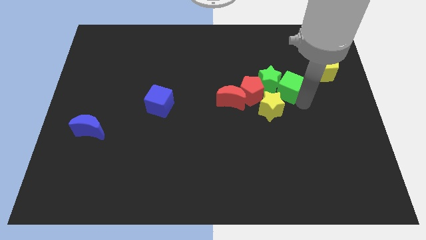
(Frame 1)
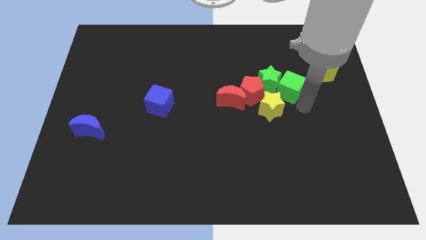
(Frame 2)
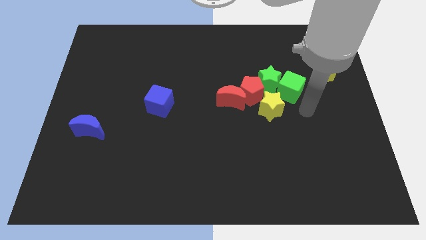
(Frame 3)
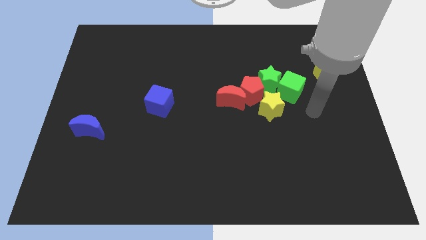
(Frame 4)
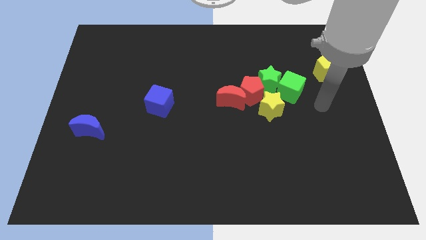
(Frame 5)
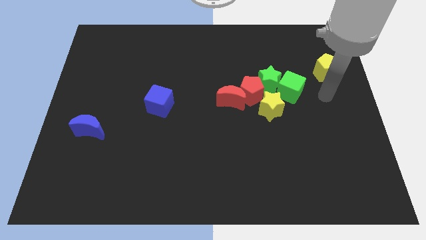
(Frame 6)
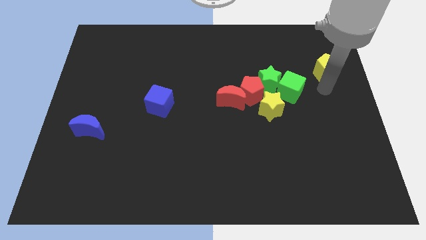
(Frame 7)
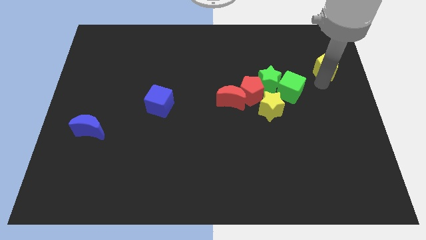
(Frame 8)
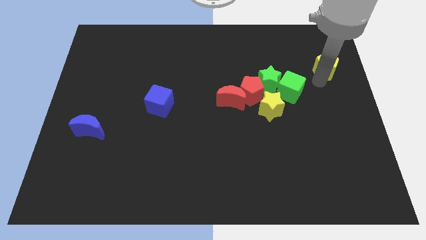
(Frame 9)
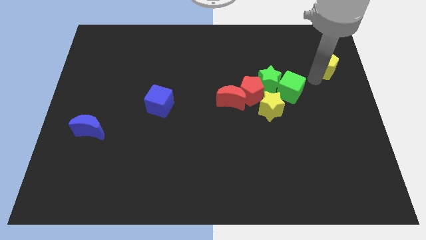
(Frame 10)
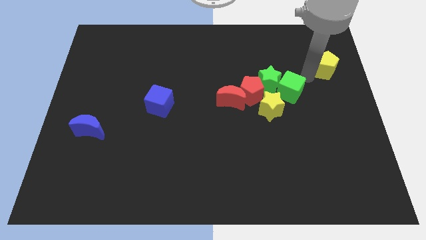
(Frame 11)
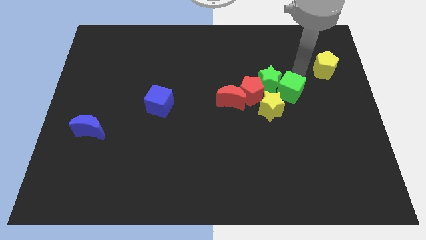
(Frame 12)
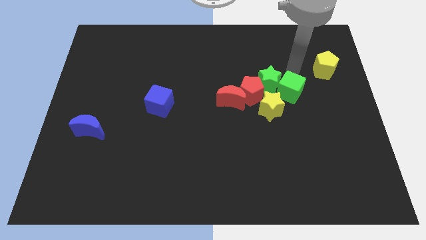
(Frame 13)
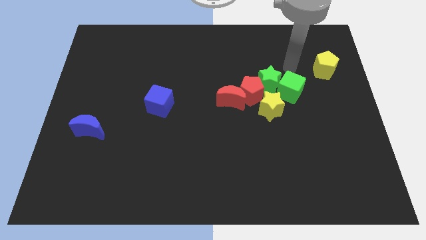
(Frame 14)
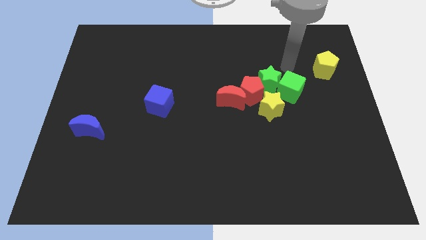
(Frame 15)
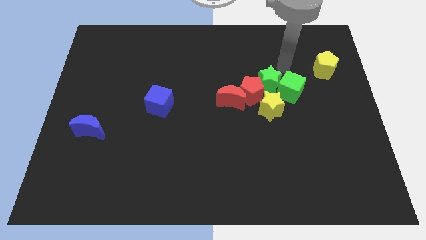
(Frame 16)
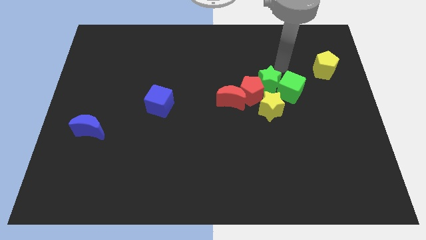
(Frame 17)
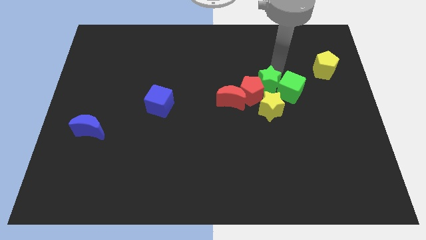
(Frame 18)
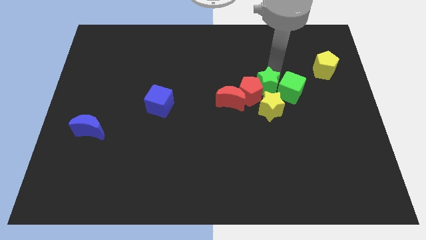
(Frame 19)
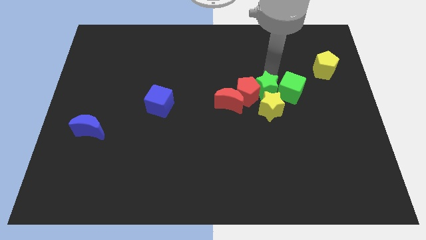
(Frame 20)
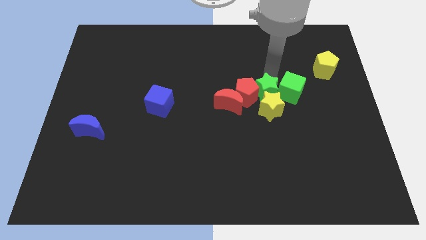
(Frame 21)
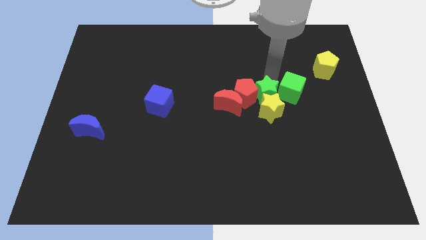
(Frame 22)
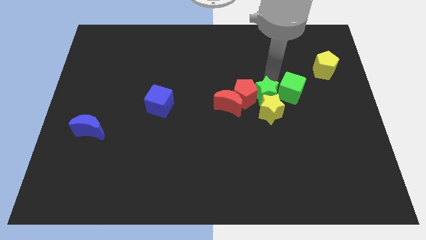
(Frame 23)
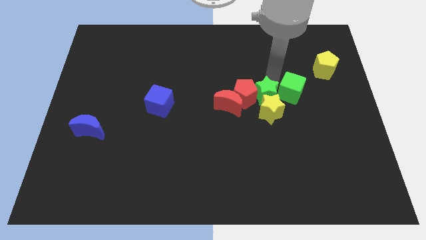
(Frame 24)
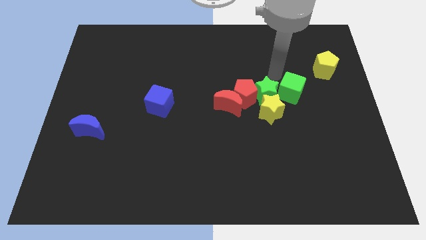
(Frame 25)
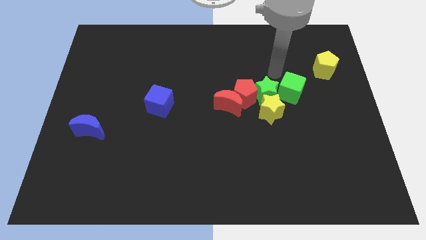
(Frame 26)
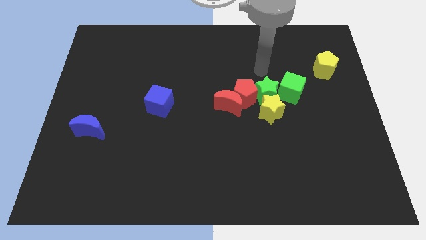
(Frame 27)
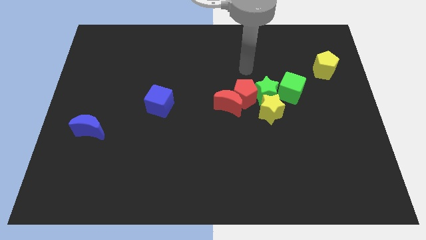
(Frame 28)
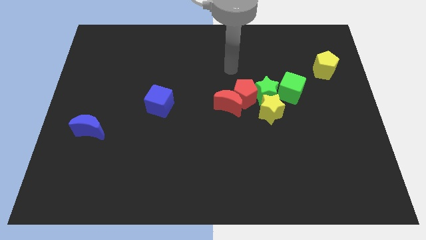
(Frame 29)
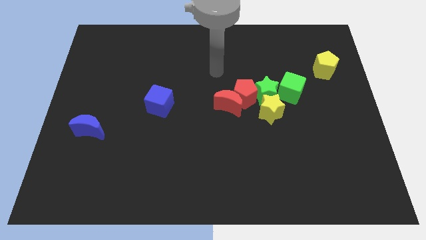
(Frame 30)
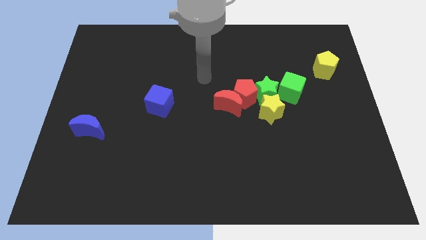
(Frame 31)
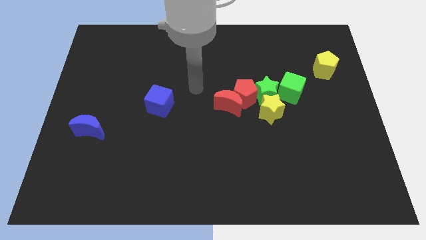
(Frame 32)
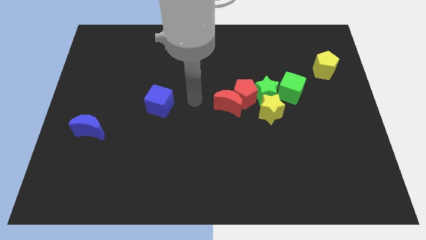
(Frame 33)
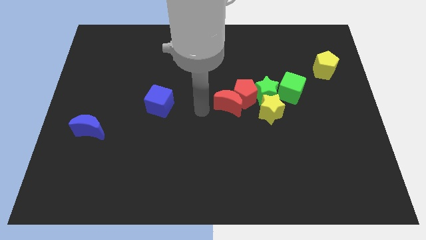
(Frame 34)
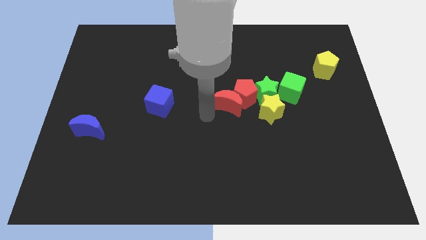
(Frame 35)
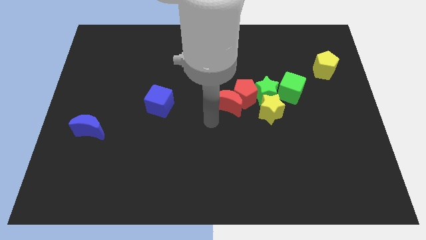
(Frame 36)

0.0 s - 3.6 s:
move the stars slightly down

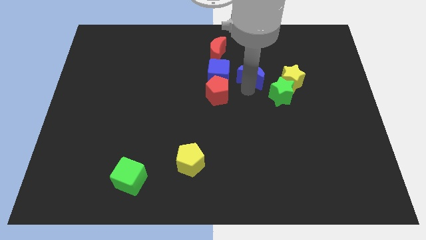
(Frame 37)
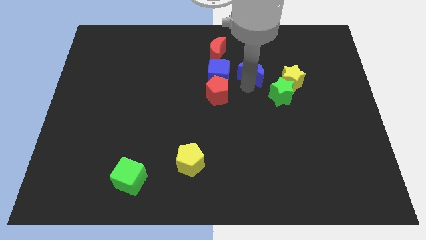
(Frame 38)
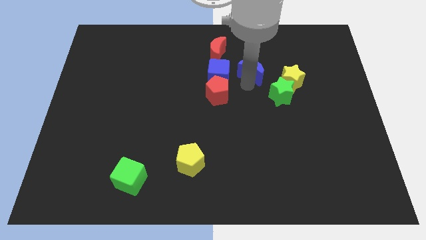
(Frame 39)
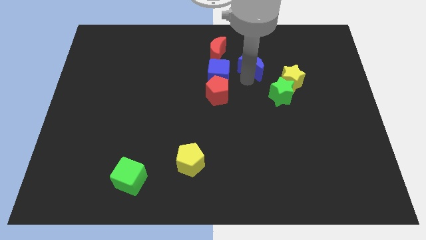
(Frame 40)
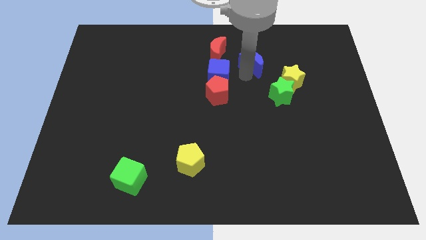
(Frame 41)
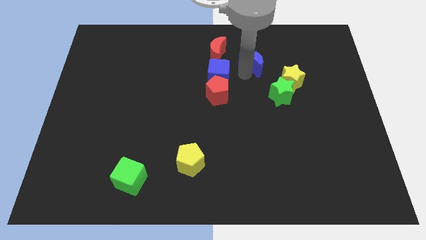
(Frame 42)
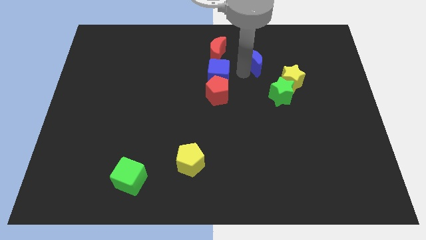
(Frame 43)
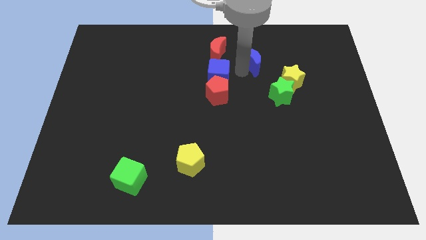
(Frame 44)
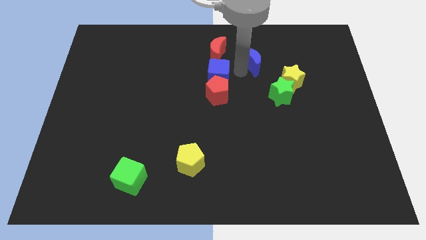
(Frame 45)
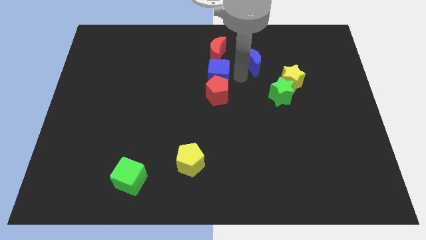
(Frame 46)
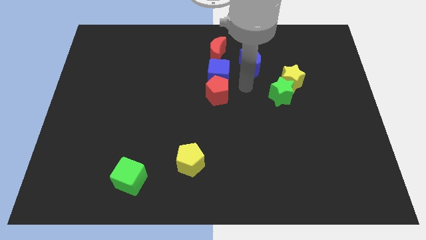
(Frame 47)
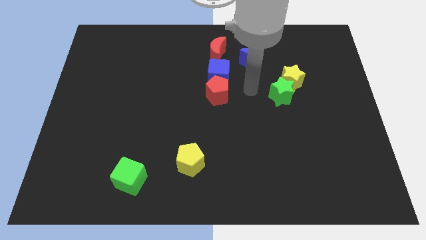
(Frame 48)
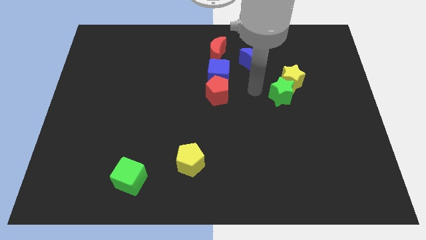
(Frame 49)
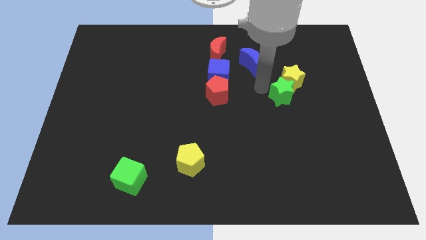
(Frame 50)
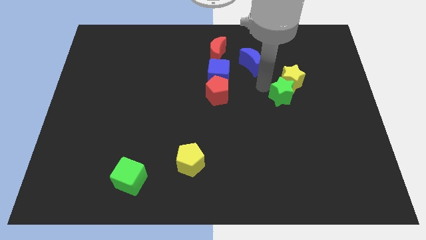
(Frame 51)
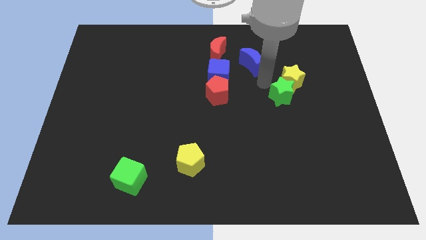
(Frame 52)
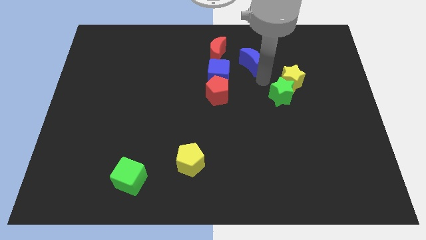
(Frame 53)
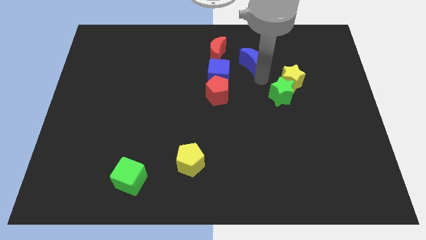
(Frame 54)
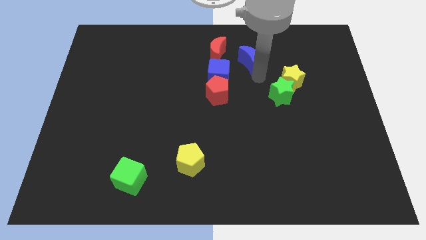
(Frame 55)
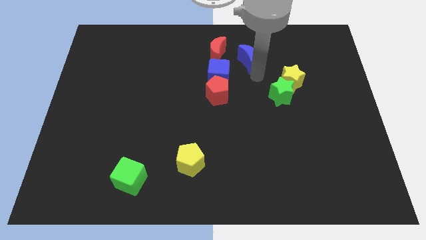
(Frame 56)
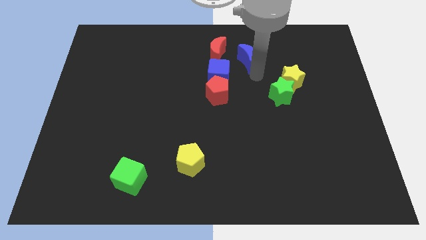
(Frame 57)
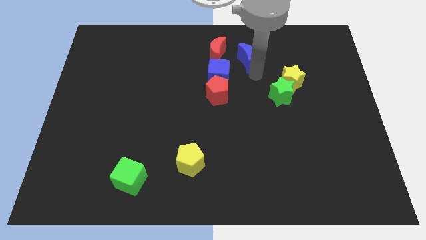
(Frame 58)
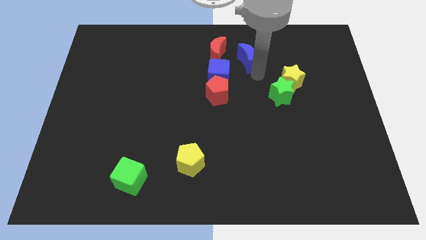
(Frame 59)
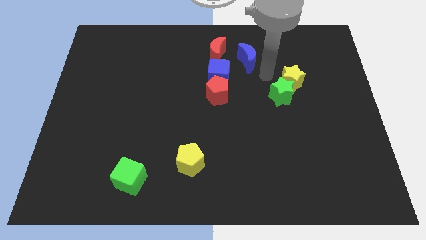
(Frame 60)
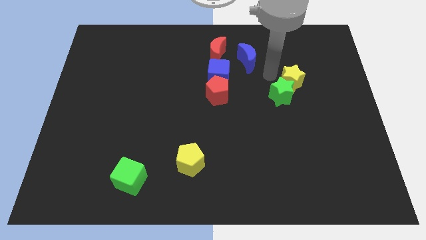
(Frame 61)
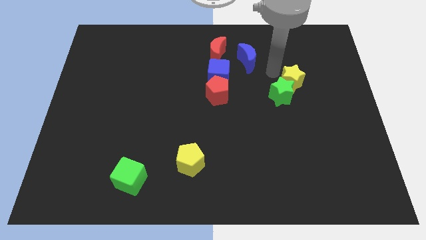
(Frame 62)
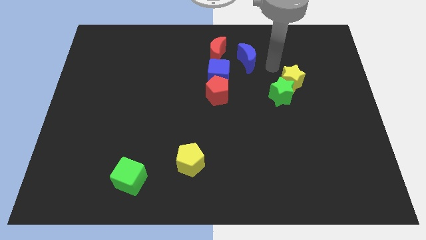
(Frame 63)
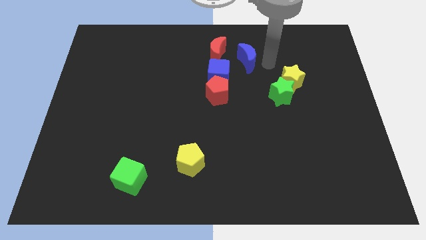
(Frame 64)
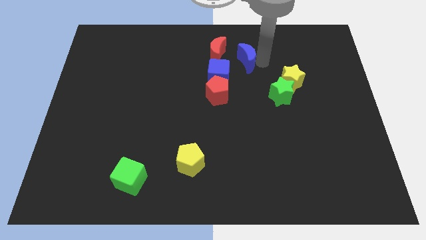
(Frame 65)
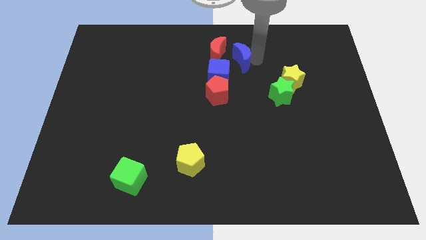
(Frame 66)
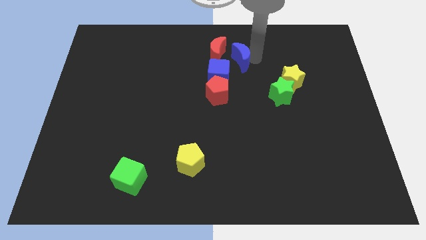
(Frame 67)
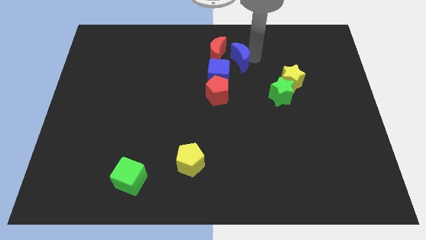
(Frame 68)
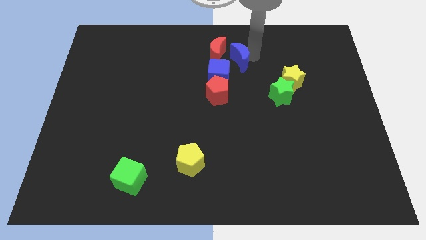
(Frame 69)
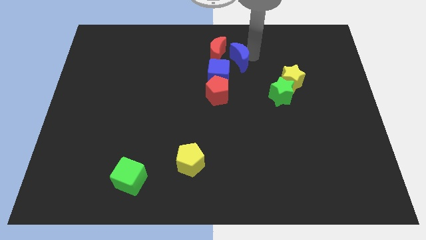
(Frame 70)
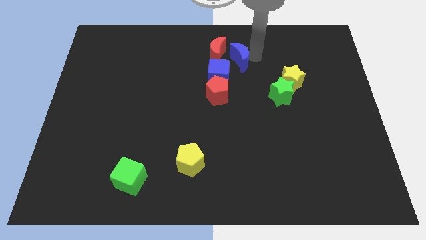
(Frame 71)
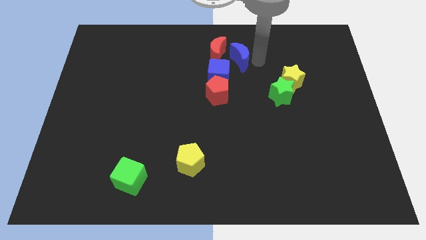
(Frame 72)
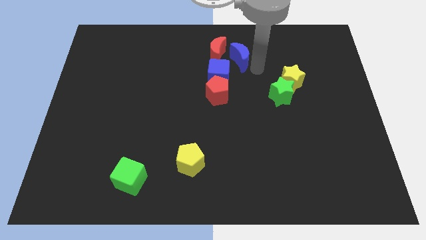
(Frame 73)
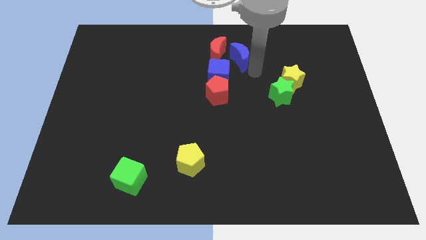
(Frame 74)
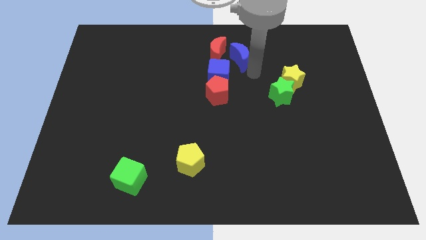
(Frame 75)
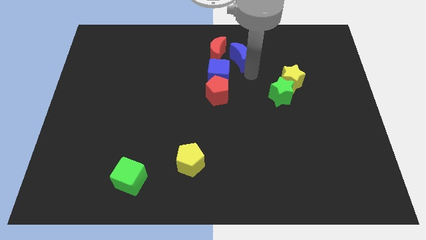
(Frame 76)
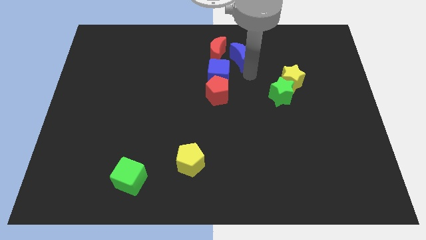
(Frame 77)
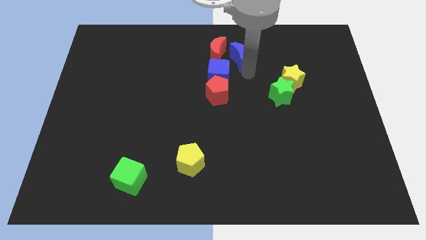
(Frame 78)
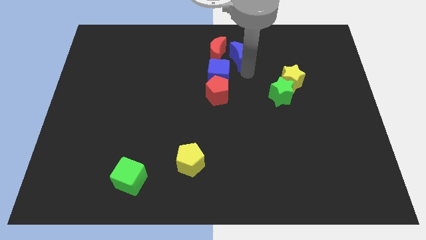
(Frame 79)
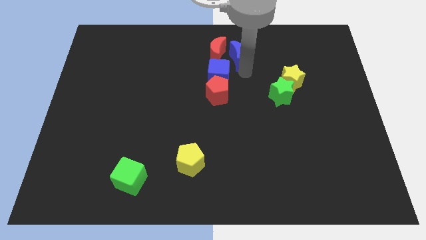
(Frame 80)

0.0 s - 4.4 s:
move the blue crescent next to the red crescent

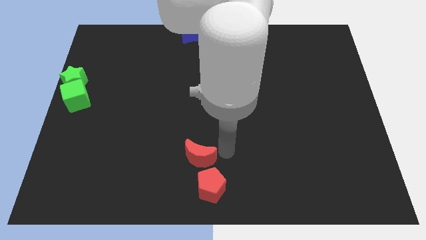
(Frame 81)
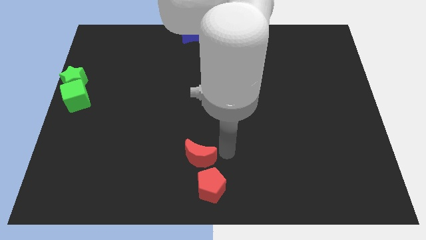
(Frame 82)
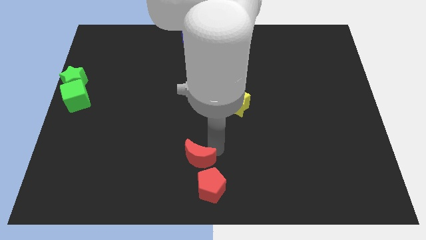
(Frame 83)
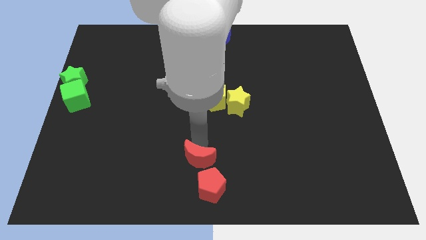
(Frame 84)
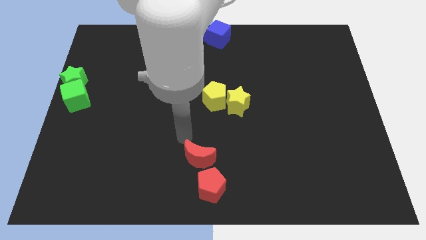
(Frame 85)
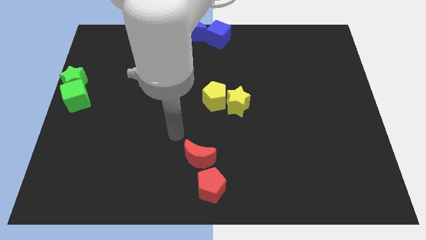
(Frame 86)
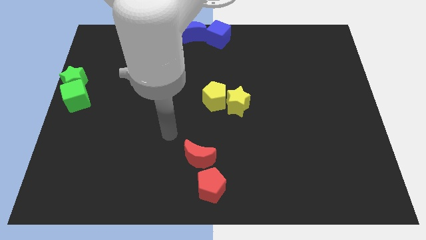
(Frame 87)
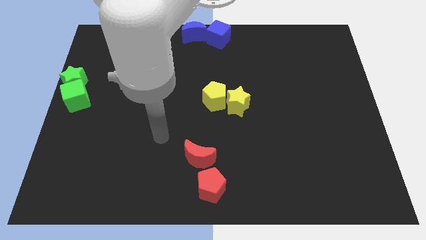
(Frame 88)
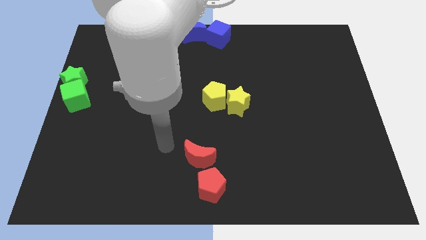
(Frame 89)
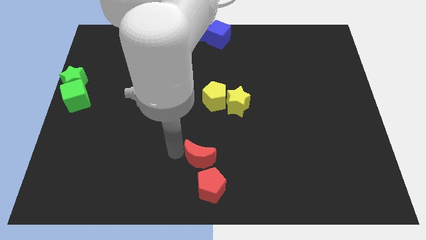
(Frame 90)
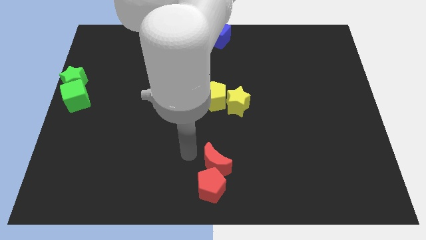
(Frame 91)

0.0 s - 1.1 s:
move the red crescent to the top of red pentagon
